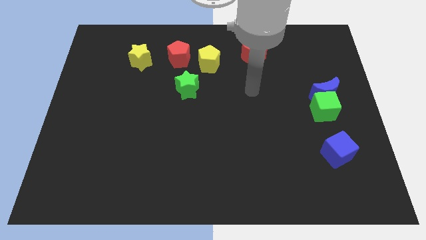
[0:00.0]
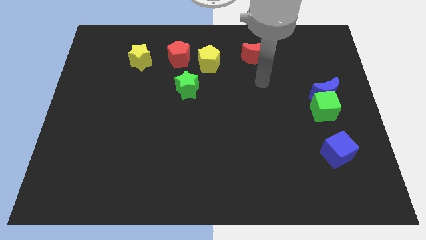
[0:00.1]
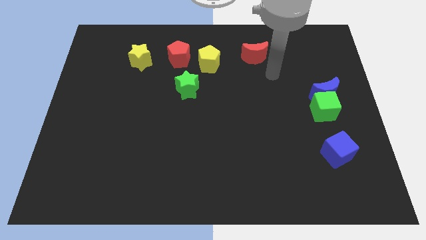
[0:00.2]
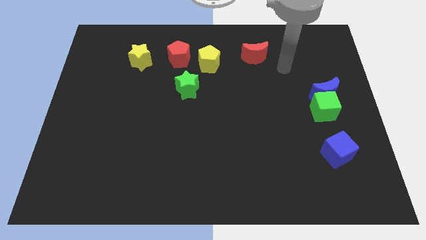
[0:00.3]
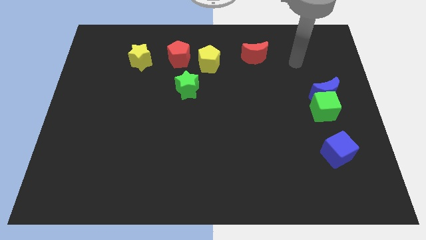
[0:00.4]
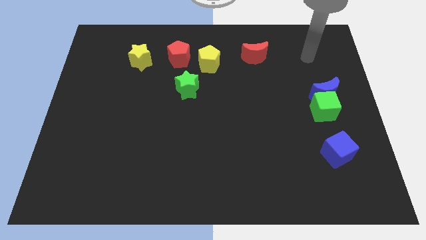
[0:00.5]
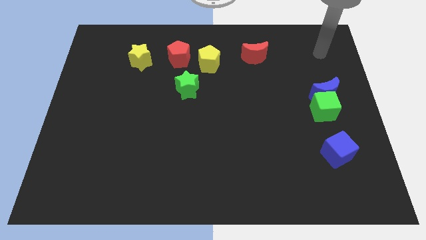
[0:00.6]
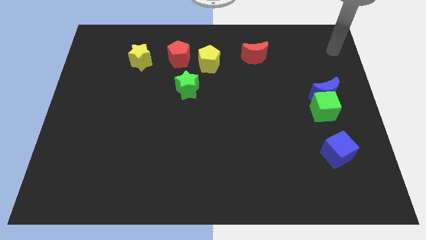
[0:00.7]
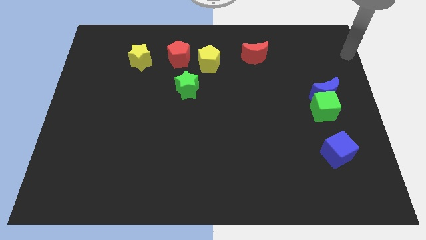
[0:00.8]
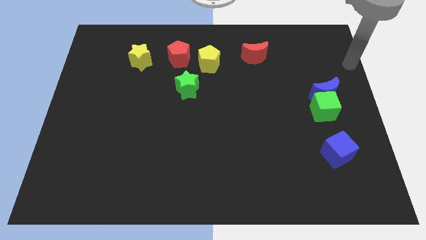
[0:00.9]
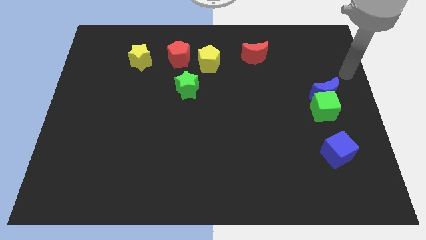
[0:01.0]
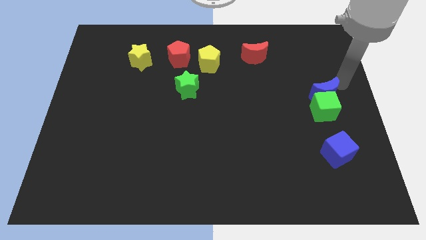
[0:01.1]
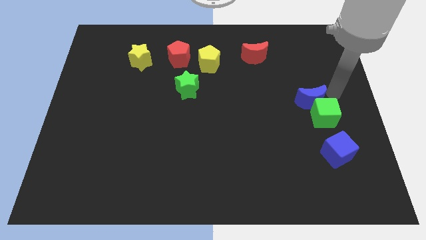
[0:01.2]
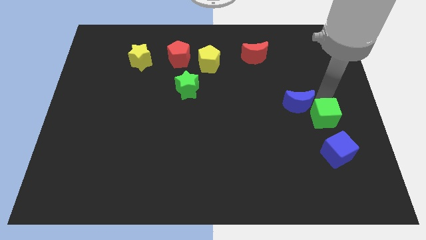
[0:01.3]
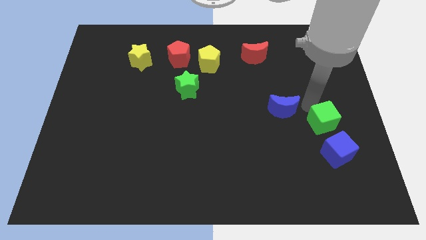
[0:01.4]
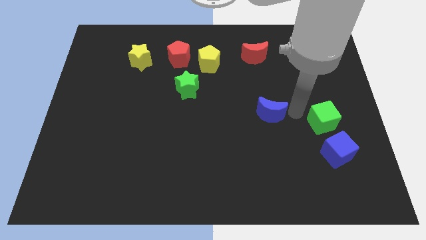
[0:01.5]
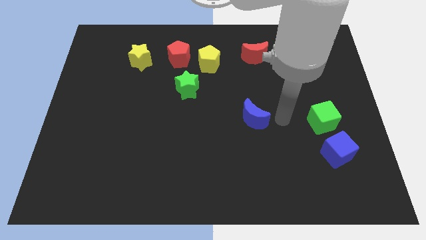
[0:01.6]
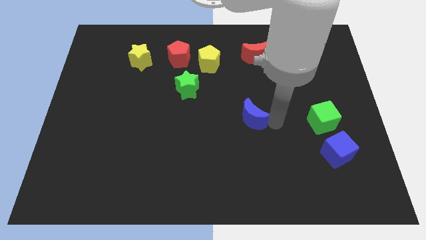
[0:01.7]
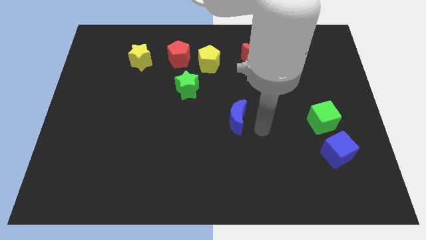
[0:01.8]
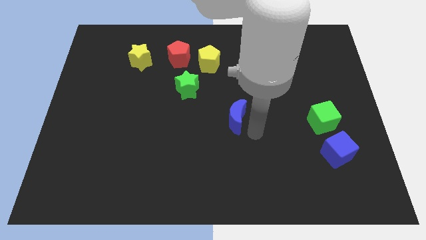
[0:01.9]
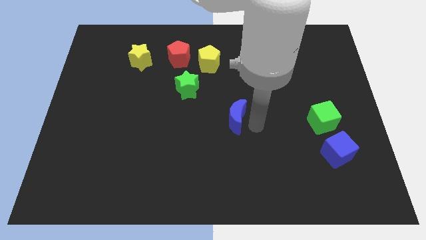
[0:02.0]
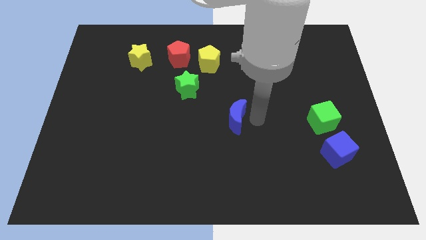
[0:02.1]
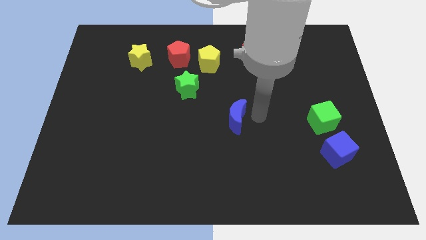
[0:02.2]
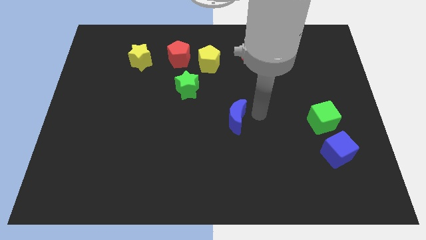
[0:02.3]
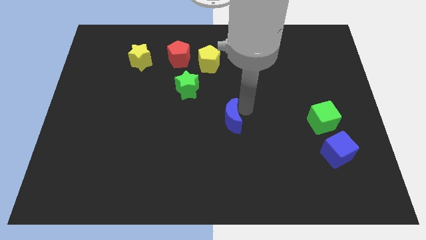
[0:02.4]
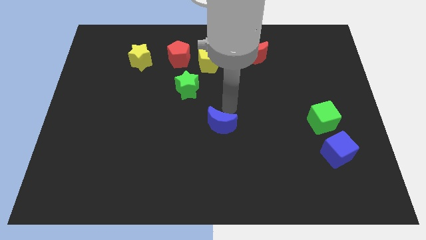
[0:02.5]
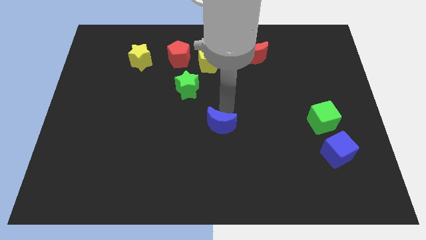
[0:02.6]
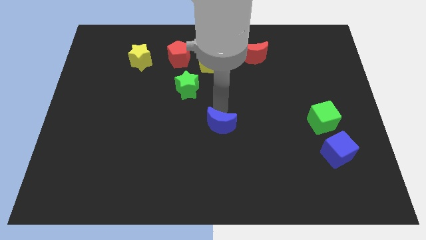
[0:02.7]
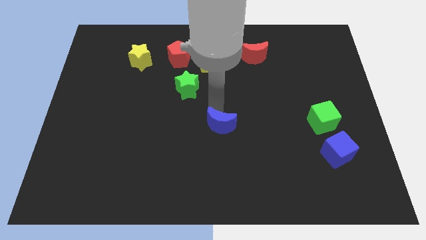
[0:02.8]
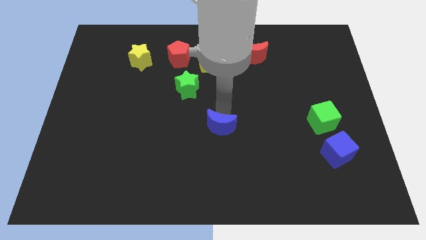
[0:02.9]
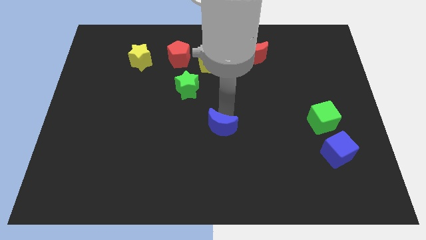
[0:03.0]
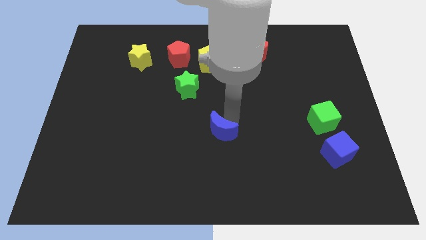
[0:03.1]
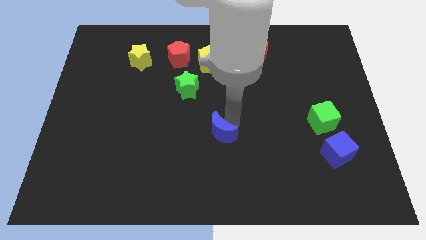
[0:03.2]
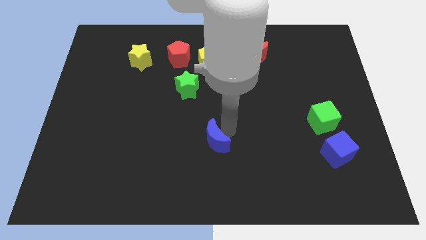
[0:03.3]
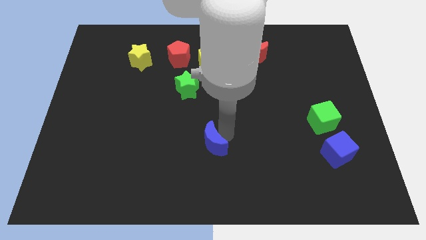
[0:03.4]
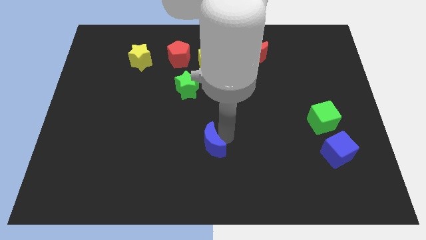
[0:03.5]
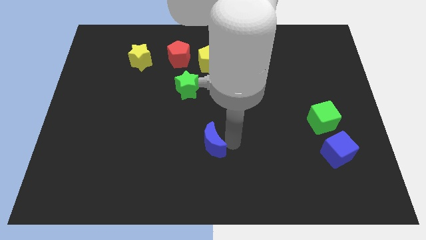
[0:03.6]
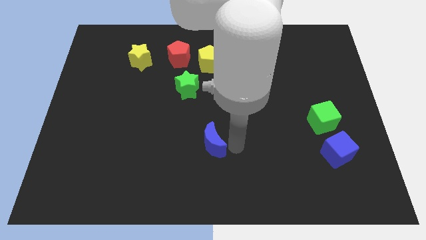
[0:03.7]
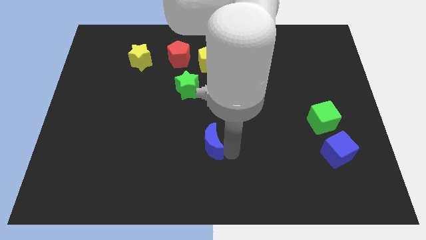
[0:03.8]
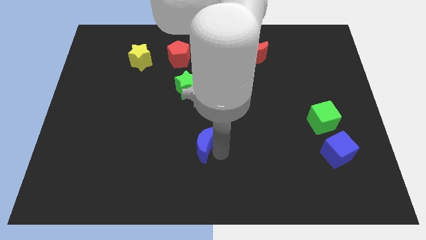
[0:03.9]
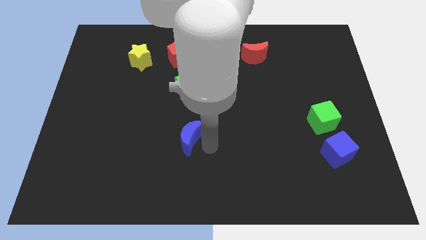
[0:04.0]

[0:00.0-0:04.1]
move the blue crescent away from the green cube

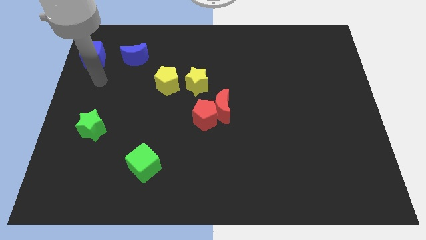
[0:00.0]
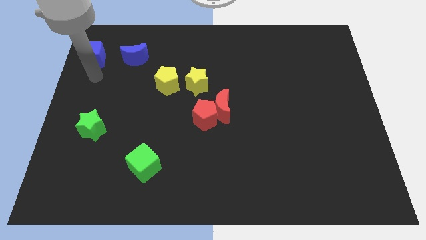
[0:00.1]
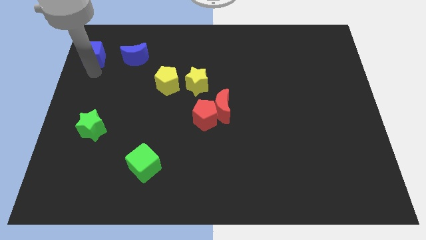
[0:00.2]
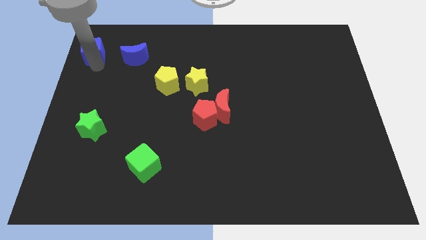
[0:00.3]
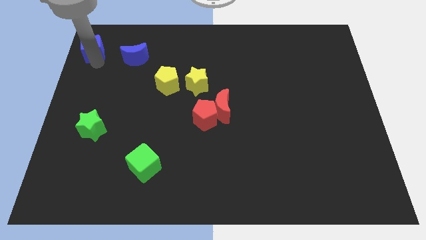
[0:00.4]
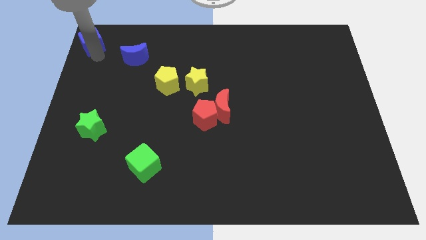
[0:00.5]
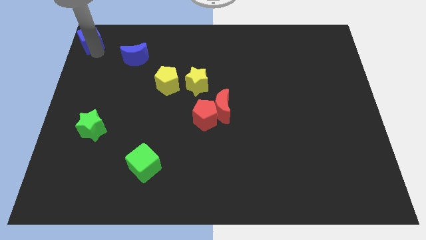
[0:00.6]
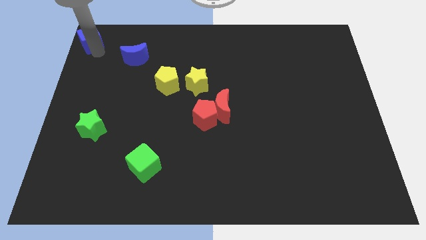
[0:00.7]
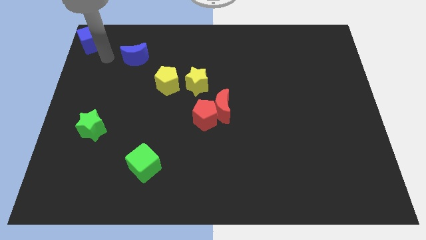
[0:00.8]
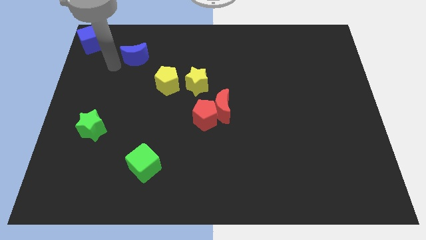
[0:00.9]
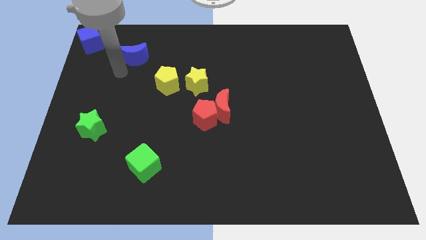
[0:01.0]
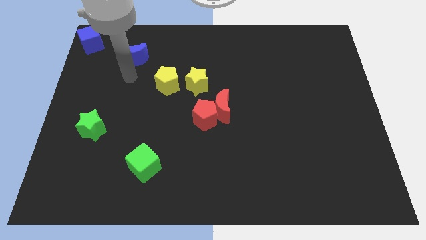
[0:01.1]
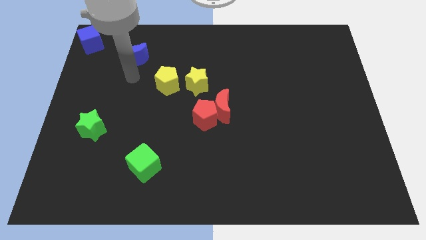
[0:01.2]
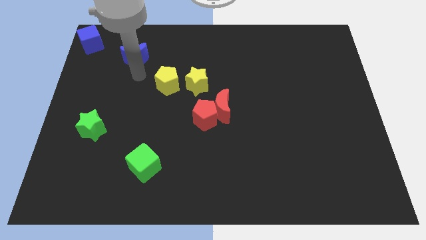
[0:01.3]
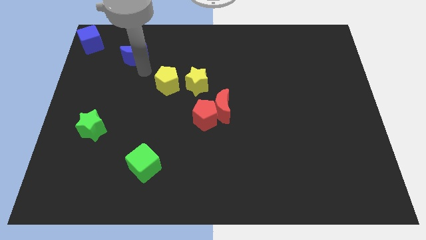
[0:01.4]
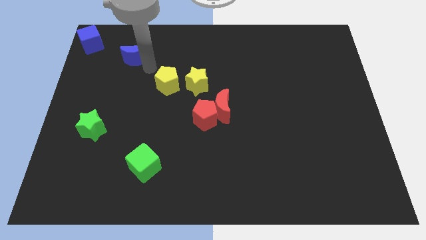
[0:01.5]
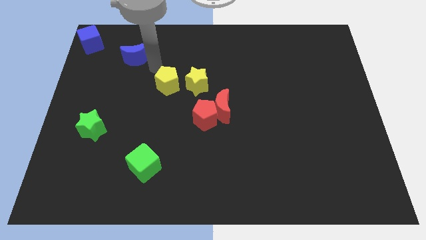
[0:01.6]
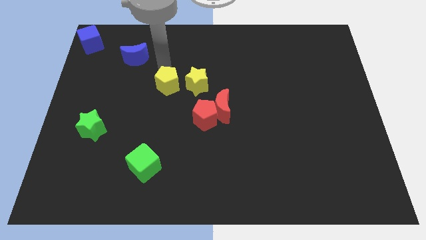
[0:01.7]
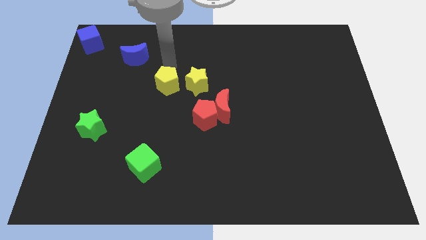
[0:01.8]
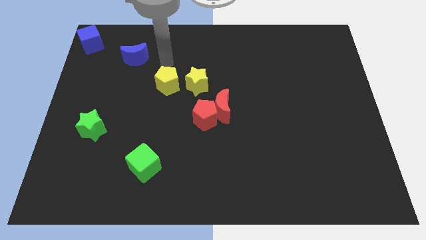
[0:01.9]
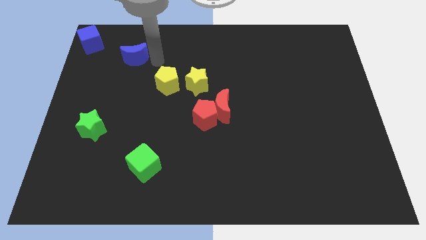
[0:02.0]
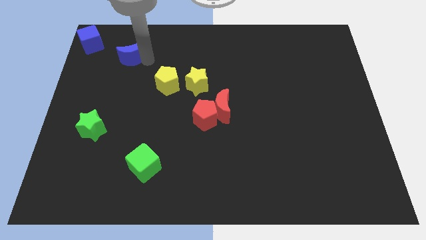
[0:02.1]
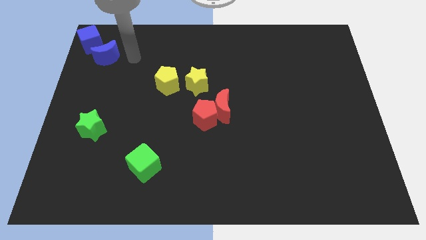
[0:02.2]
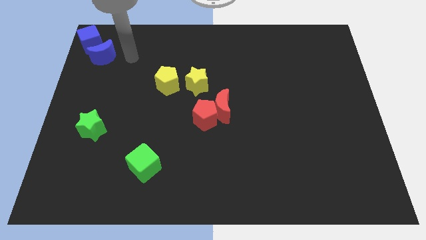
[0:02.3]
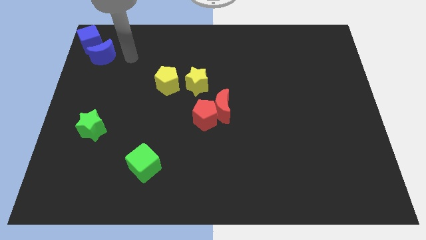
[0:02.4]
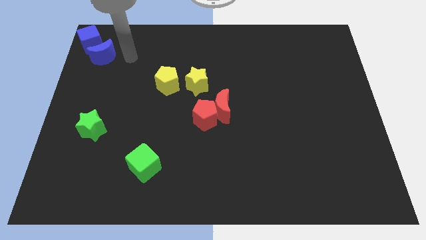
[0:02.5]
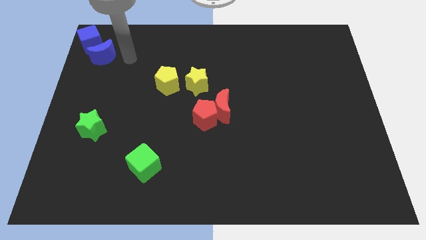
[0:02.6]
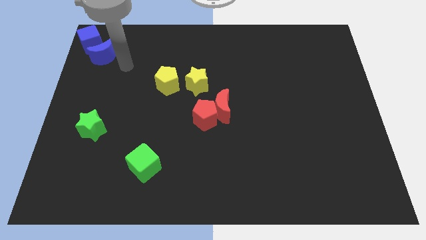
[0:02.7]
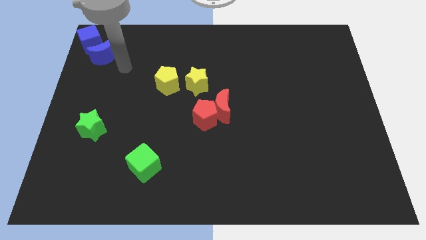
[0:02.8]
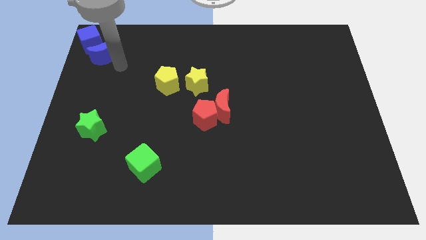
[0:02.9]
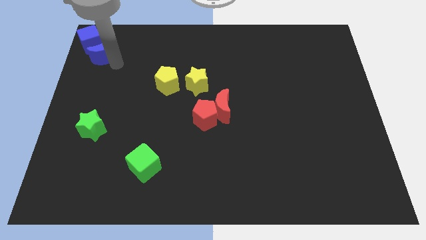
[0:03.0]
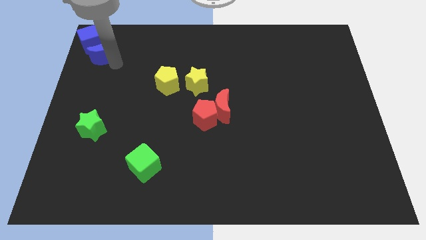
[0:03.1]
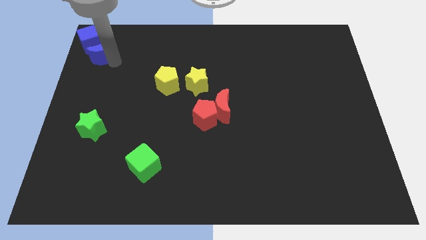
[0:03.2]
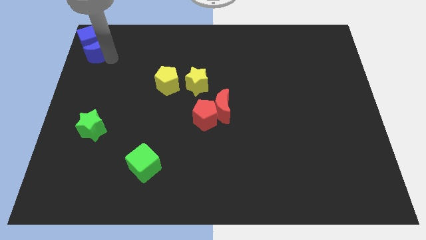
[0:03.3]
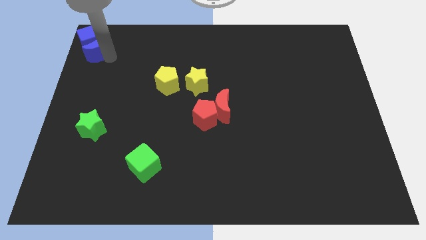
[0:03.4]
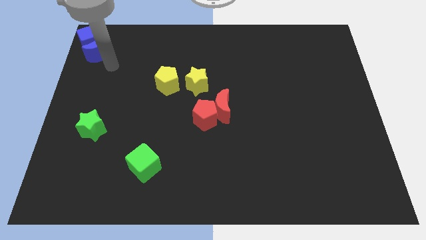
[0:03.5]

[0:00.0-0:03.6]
place the blue blocks on the top left corner

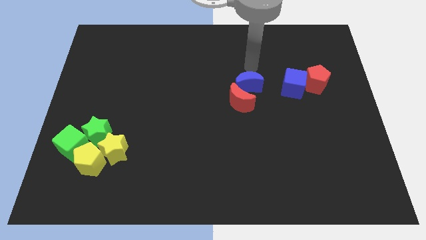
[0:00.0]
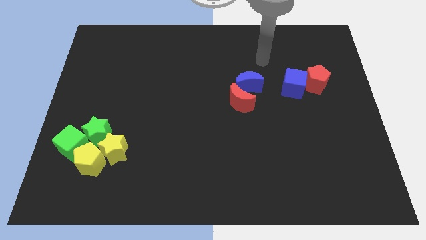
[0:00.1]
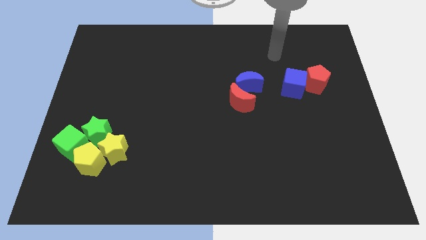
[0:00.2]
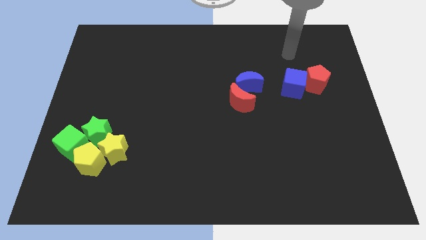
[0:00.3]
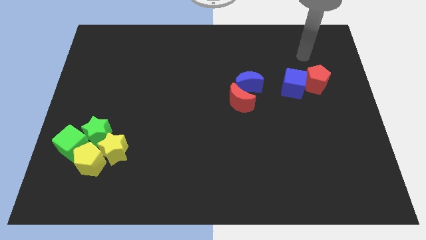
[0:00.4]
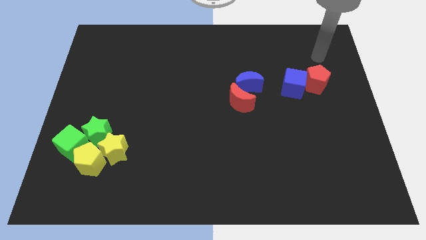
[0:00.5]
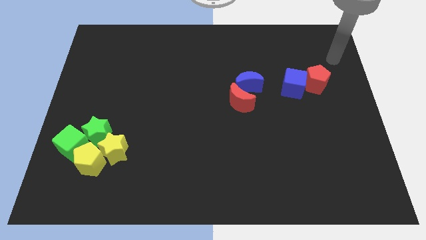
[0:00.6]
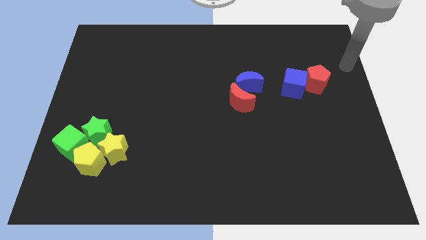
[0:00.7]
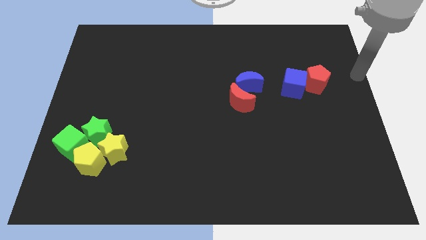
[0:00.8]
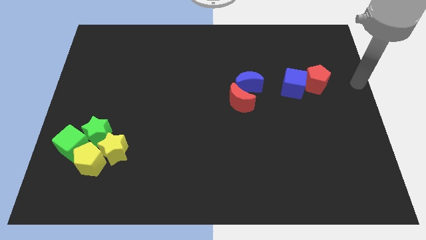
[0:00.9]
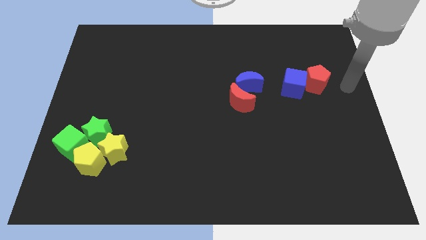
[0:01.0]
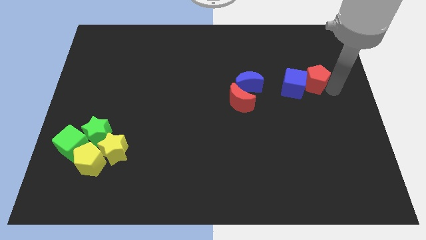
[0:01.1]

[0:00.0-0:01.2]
point your arm at the right of the red pentagon
